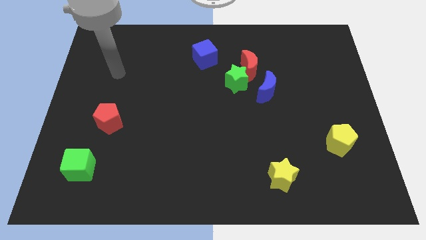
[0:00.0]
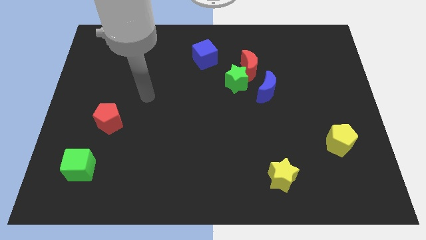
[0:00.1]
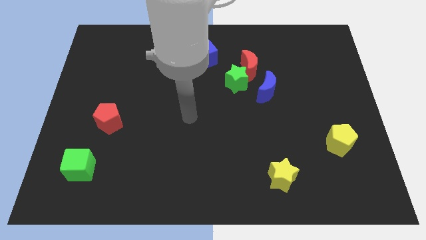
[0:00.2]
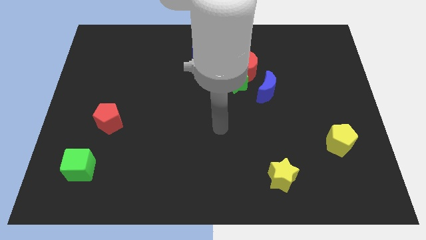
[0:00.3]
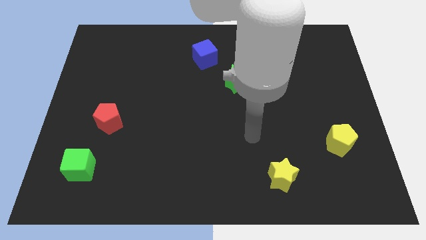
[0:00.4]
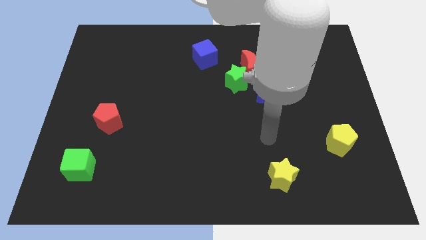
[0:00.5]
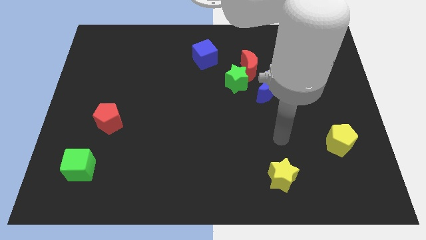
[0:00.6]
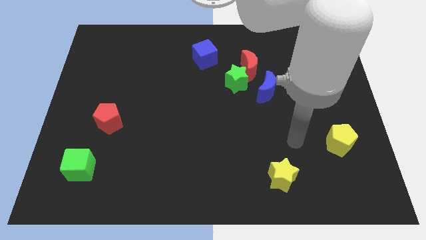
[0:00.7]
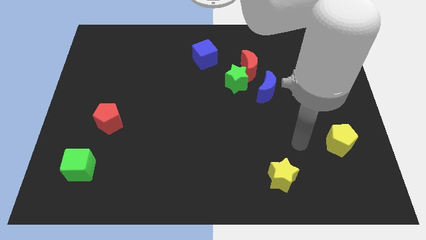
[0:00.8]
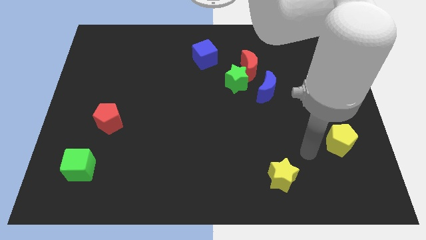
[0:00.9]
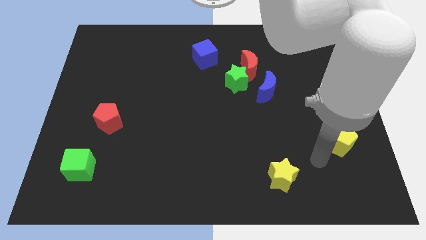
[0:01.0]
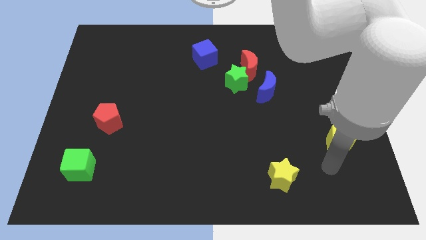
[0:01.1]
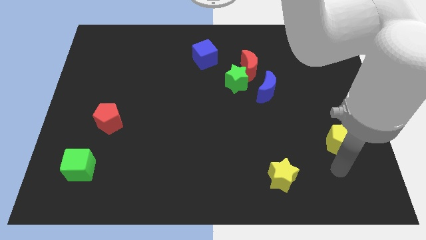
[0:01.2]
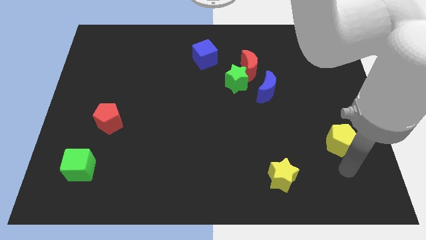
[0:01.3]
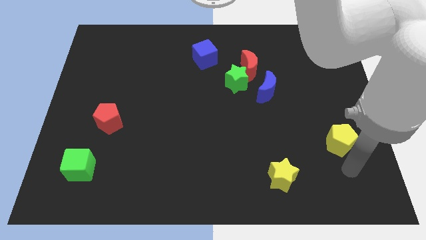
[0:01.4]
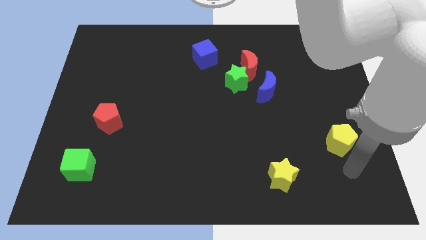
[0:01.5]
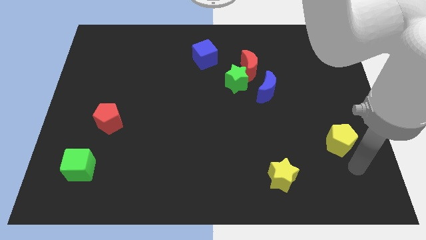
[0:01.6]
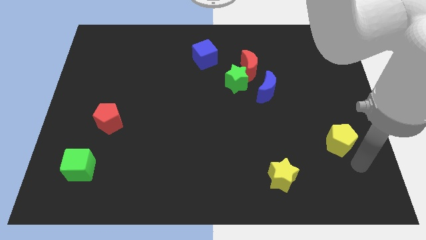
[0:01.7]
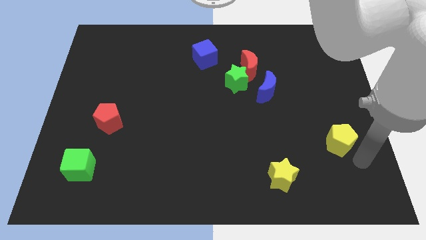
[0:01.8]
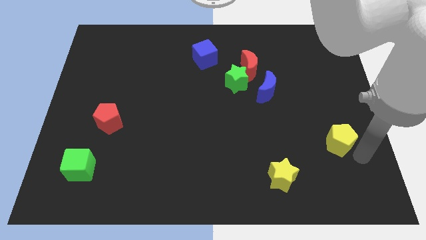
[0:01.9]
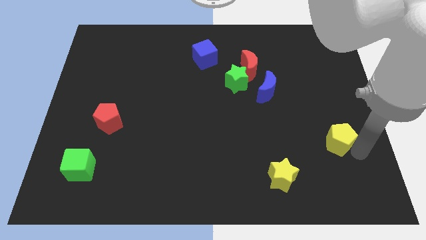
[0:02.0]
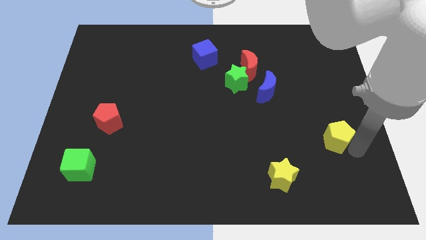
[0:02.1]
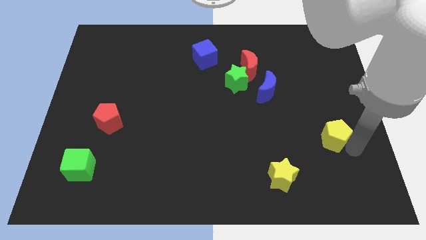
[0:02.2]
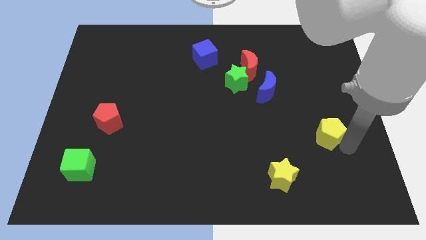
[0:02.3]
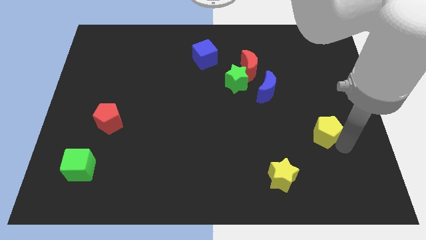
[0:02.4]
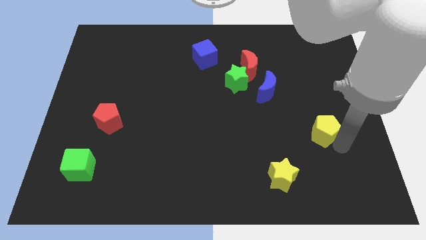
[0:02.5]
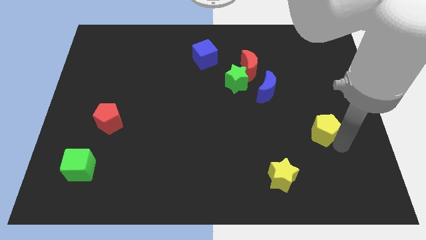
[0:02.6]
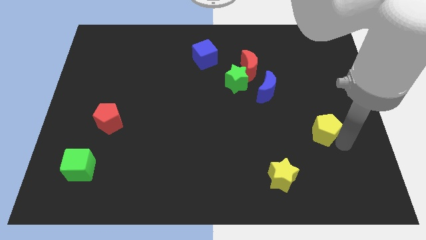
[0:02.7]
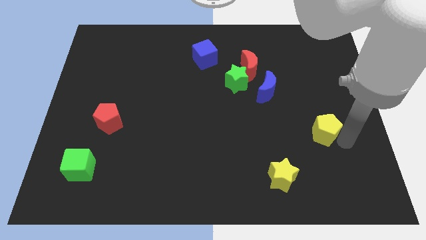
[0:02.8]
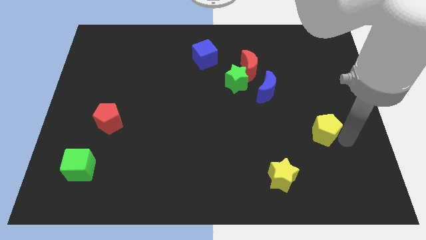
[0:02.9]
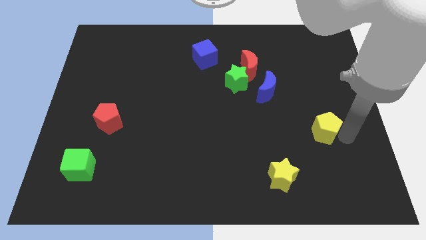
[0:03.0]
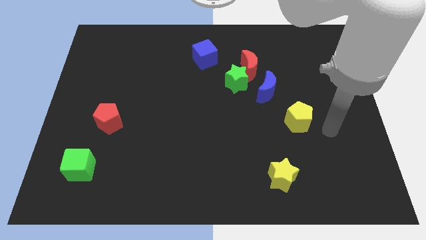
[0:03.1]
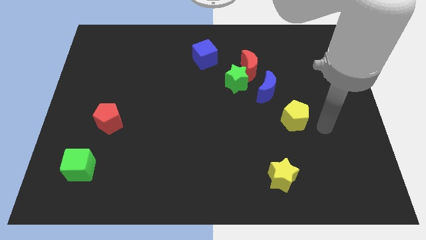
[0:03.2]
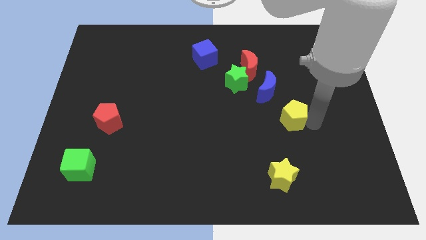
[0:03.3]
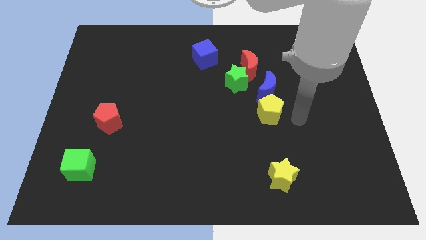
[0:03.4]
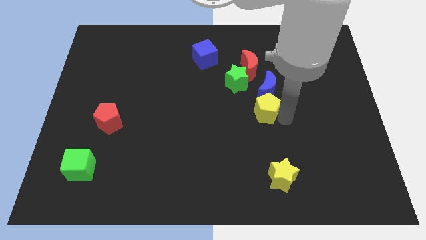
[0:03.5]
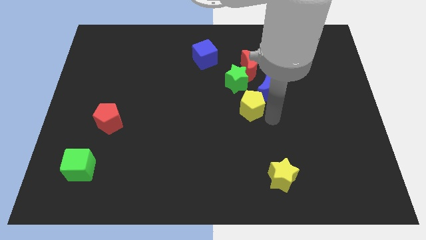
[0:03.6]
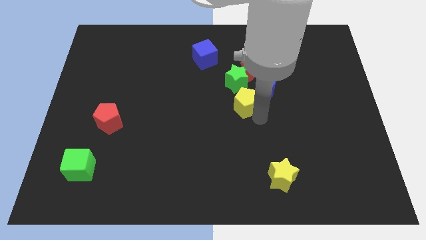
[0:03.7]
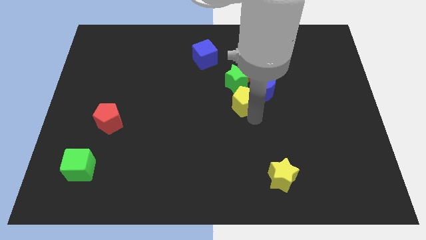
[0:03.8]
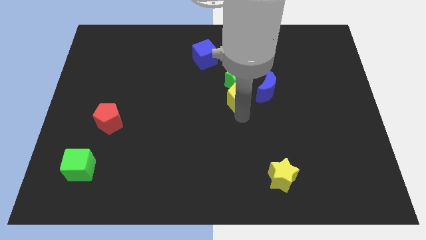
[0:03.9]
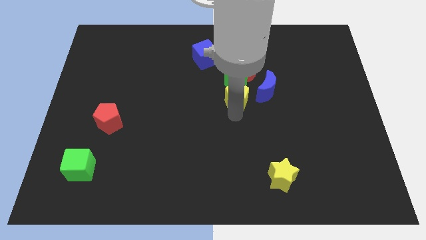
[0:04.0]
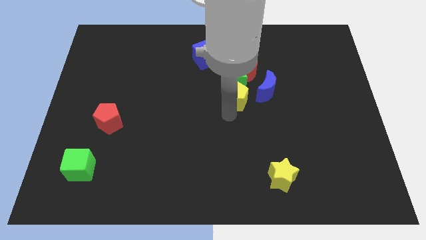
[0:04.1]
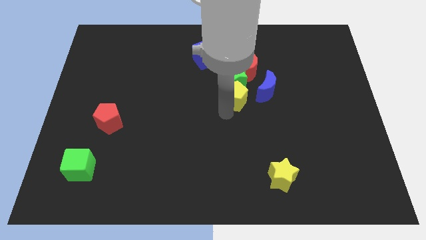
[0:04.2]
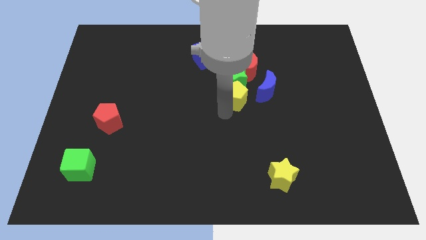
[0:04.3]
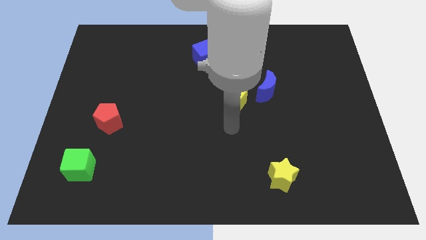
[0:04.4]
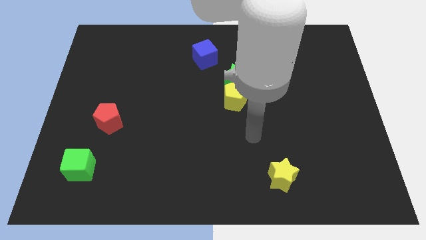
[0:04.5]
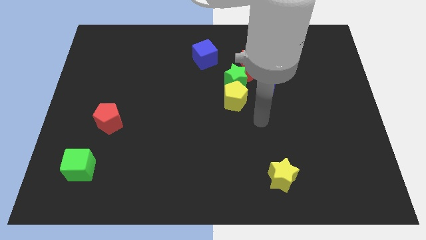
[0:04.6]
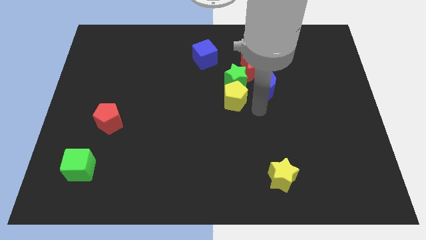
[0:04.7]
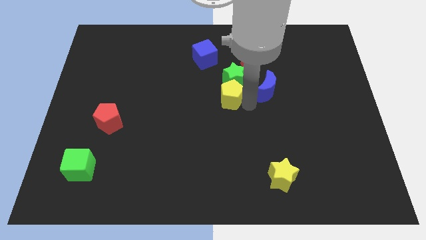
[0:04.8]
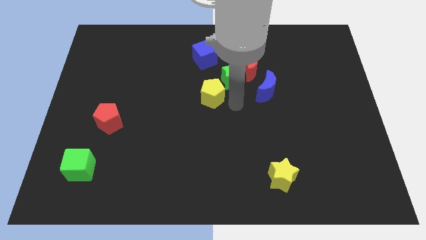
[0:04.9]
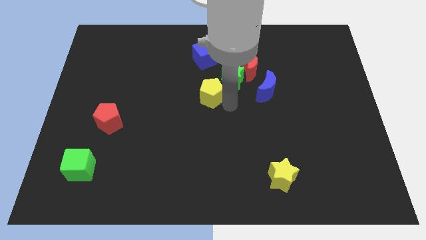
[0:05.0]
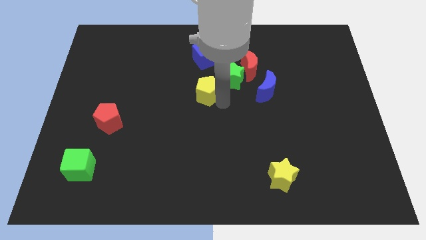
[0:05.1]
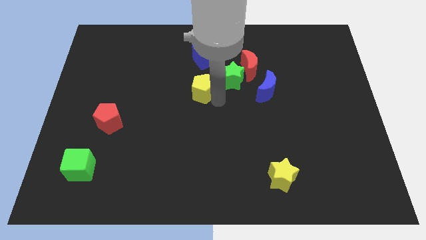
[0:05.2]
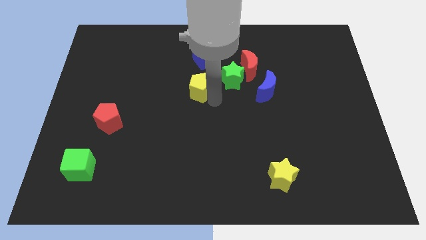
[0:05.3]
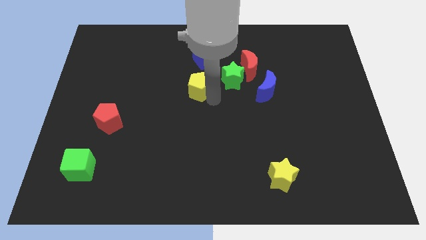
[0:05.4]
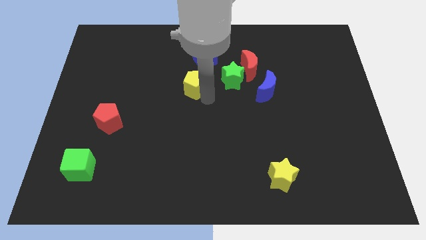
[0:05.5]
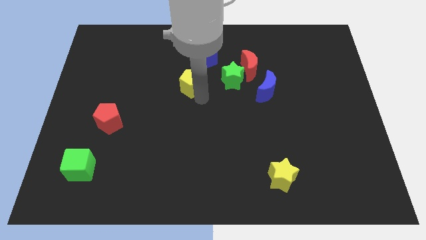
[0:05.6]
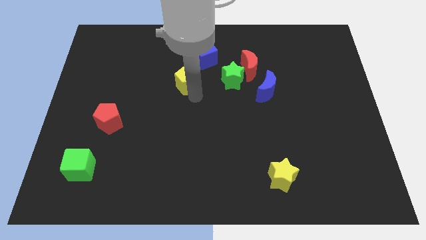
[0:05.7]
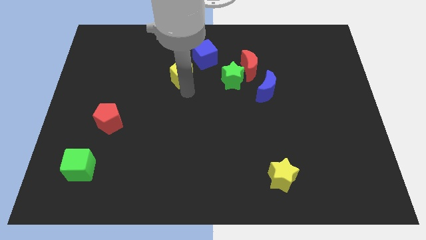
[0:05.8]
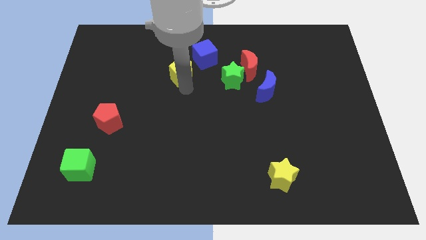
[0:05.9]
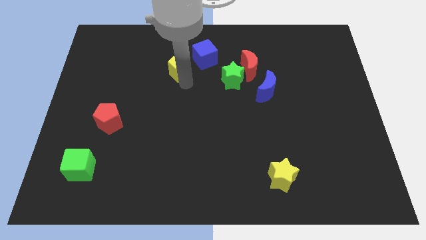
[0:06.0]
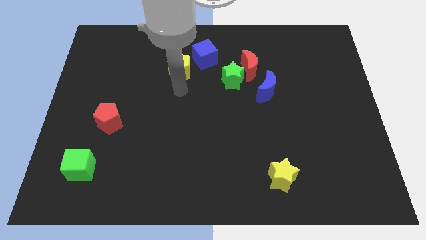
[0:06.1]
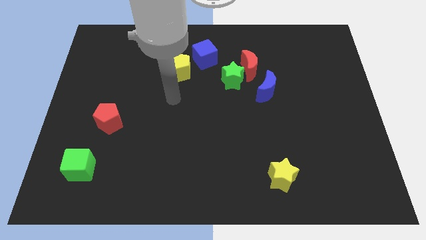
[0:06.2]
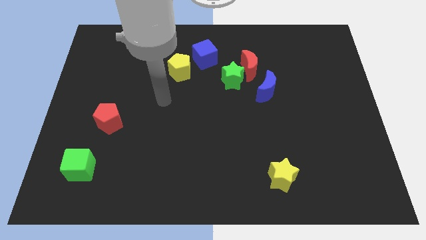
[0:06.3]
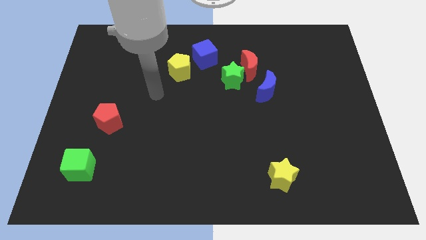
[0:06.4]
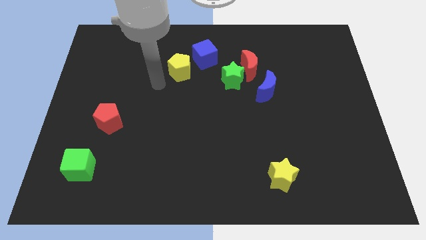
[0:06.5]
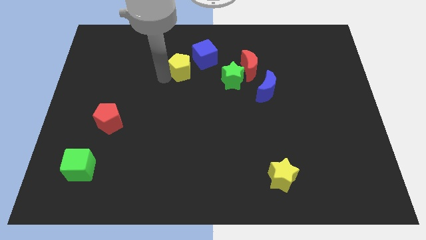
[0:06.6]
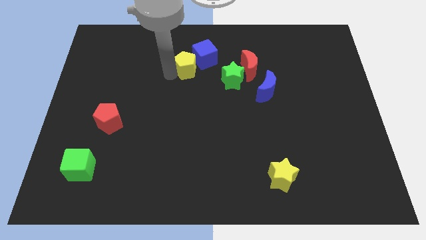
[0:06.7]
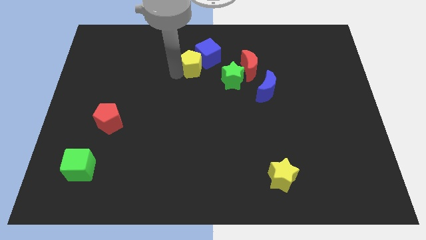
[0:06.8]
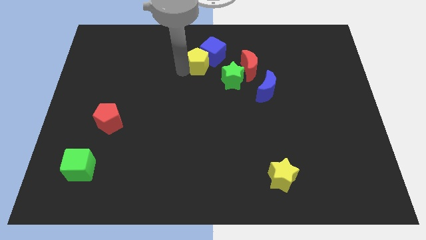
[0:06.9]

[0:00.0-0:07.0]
push the yellow pentagon next to the blue cube

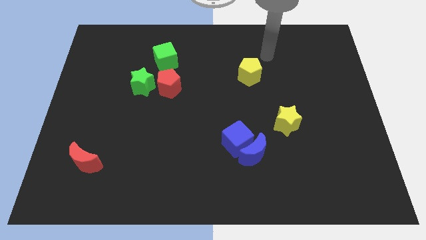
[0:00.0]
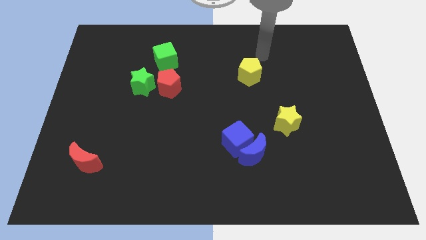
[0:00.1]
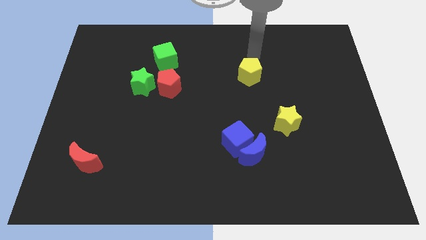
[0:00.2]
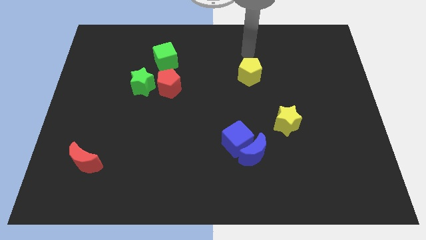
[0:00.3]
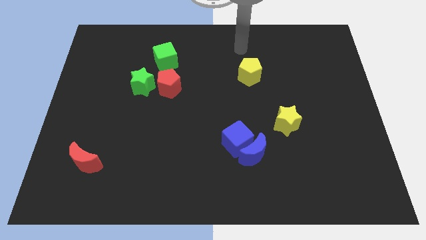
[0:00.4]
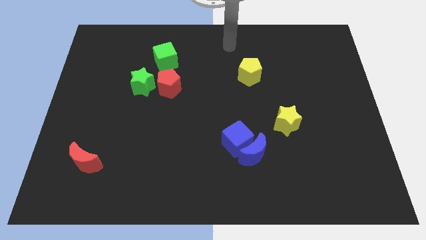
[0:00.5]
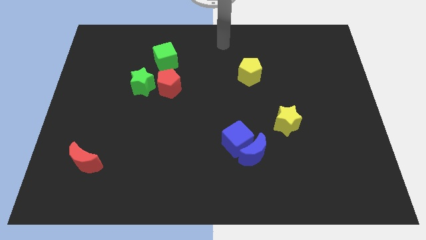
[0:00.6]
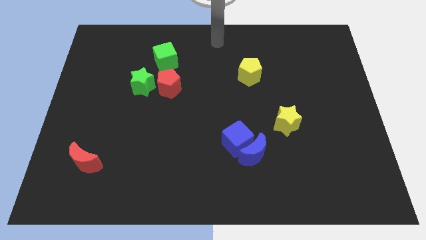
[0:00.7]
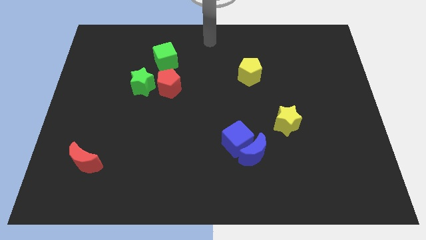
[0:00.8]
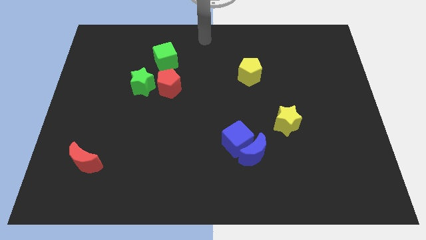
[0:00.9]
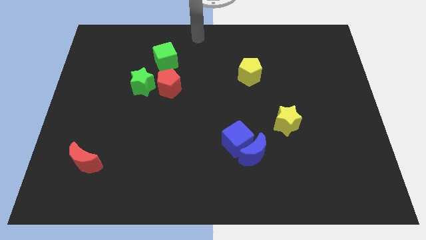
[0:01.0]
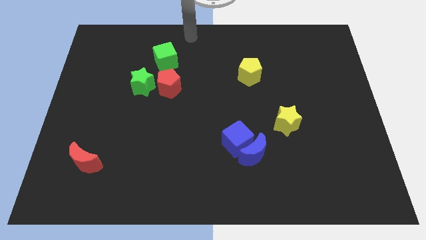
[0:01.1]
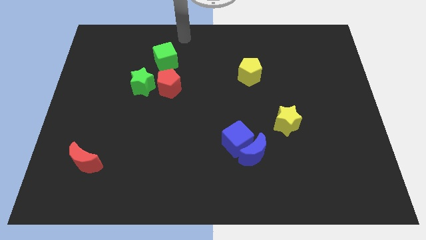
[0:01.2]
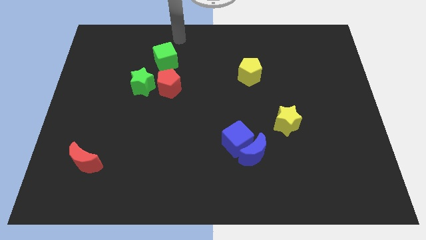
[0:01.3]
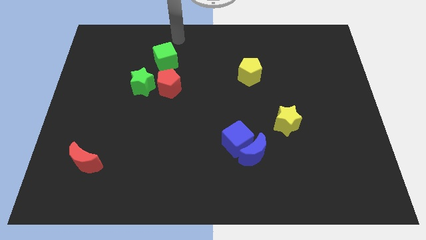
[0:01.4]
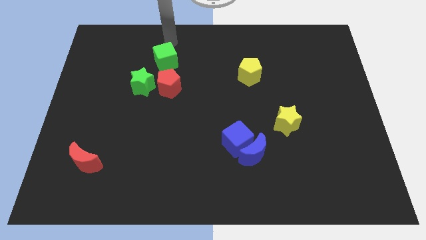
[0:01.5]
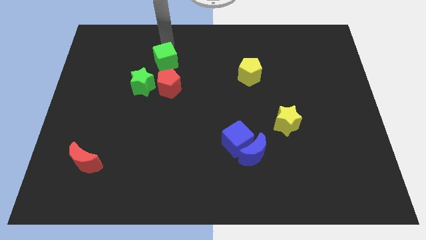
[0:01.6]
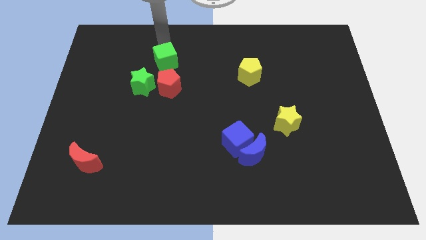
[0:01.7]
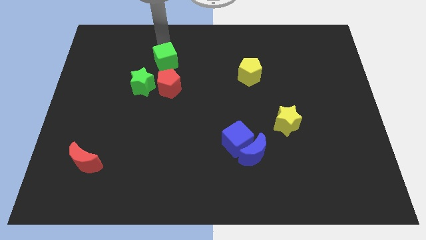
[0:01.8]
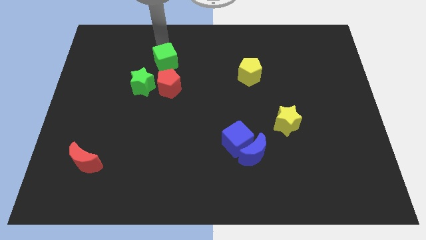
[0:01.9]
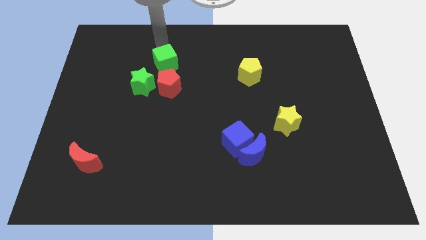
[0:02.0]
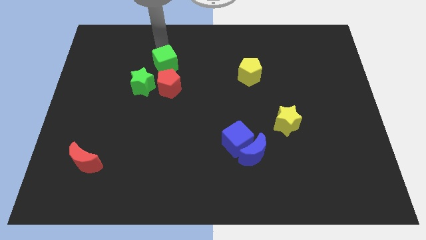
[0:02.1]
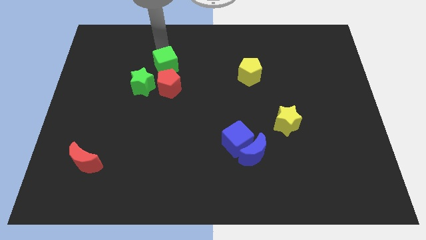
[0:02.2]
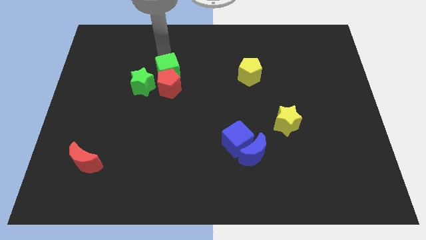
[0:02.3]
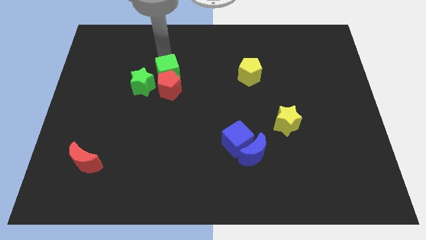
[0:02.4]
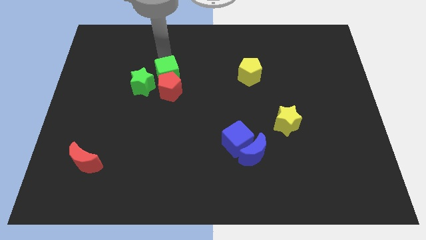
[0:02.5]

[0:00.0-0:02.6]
push the green cube close to the red pentagon
